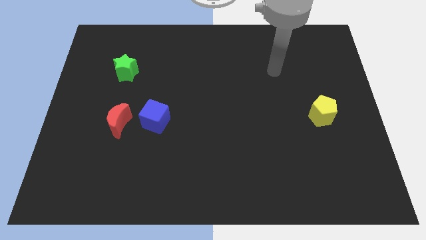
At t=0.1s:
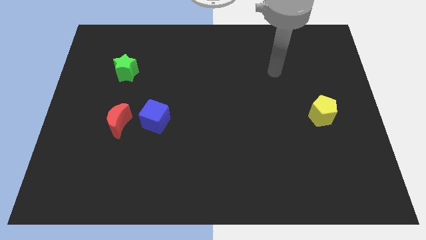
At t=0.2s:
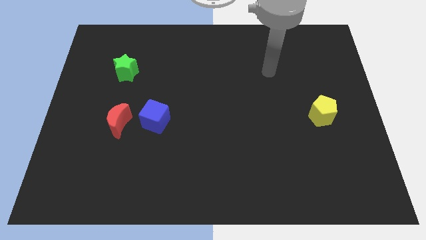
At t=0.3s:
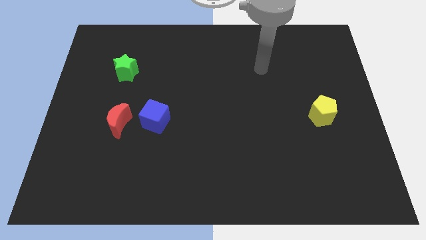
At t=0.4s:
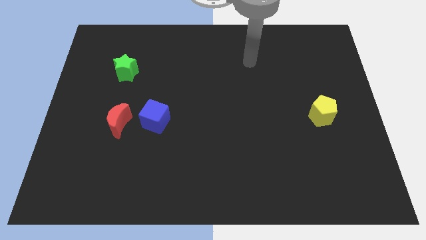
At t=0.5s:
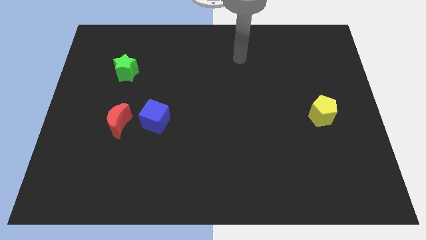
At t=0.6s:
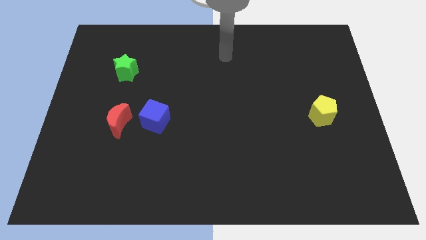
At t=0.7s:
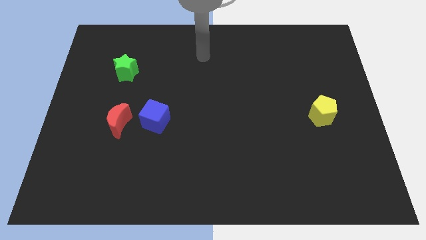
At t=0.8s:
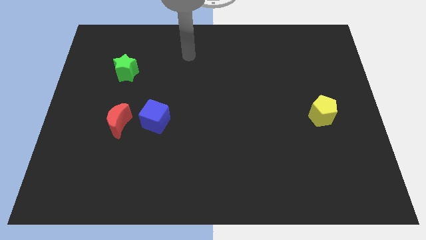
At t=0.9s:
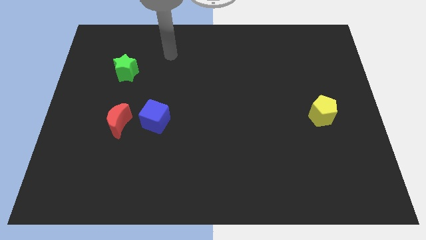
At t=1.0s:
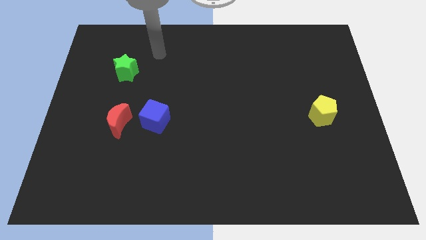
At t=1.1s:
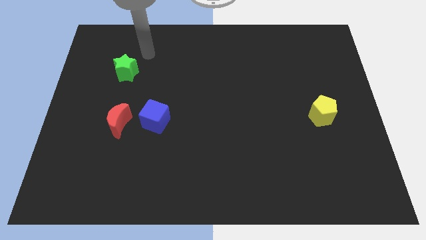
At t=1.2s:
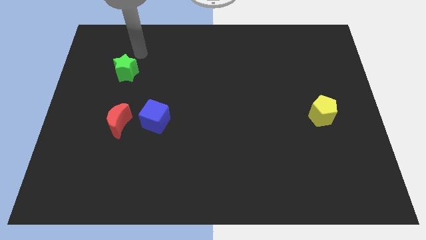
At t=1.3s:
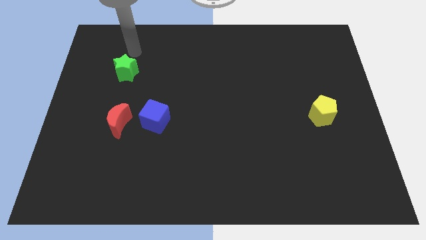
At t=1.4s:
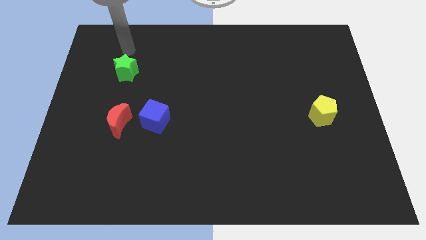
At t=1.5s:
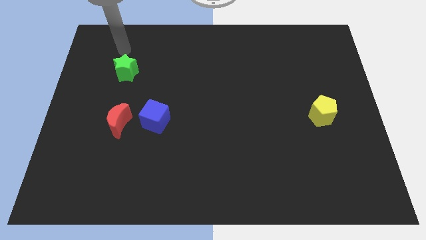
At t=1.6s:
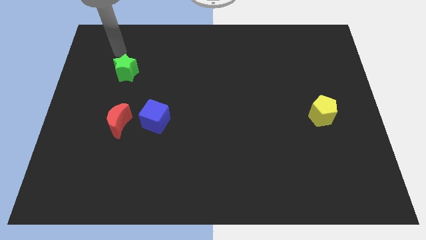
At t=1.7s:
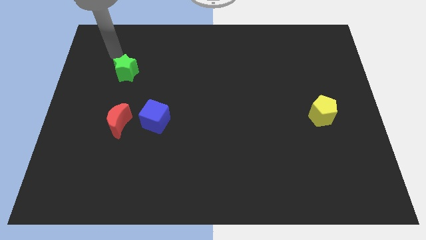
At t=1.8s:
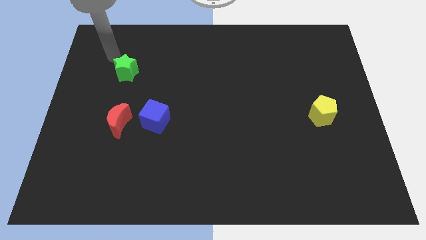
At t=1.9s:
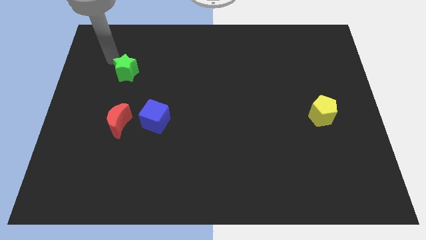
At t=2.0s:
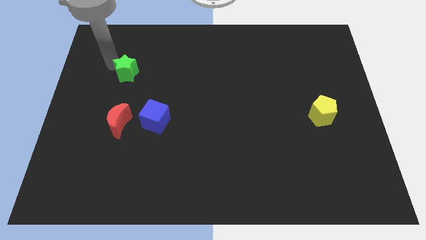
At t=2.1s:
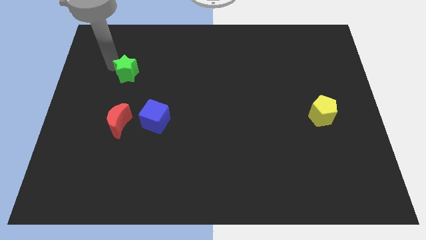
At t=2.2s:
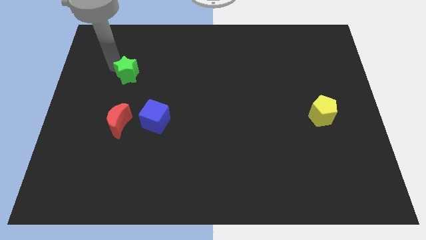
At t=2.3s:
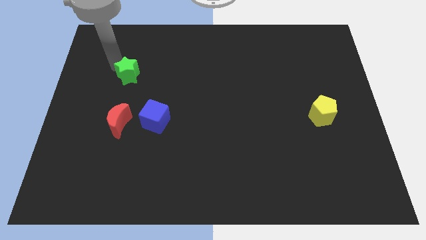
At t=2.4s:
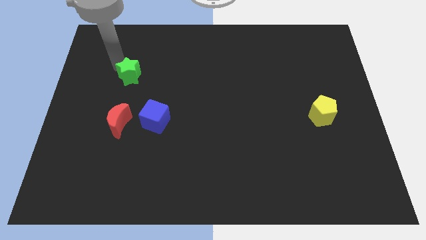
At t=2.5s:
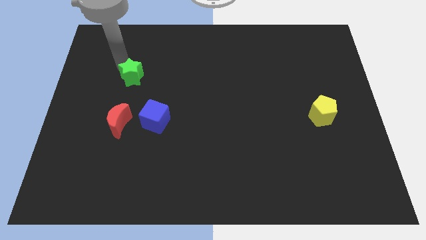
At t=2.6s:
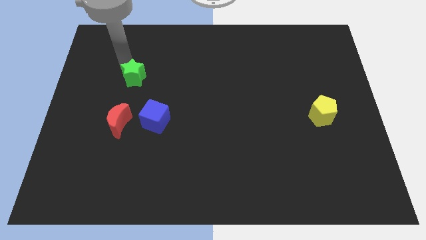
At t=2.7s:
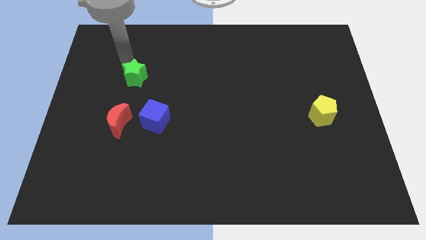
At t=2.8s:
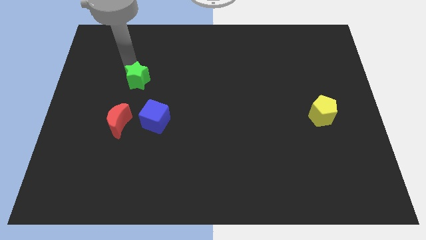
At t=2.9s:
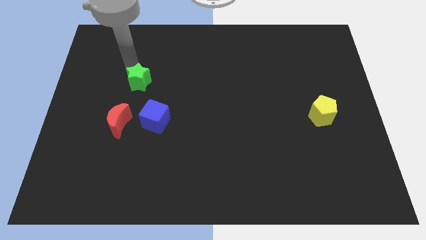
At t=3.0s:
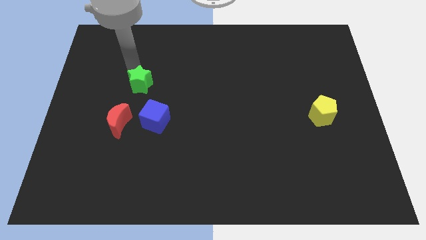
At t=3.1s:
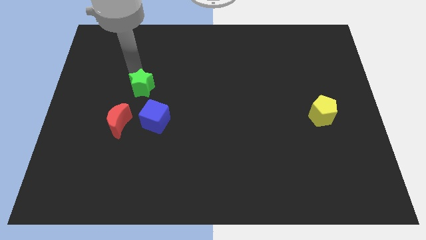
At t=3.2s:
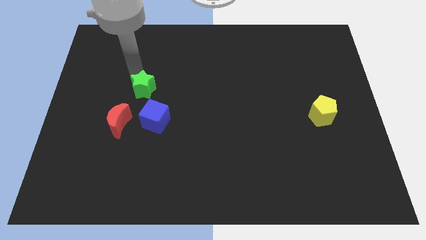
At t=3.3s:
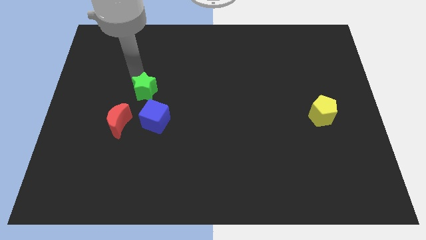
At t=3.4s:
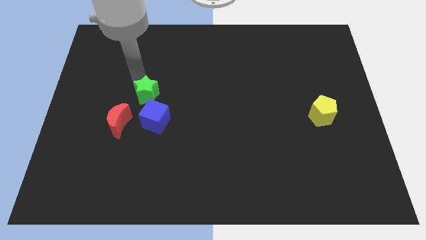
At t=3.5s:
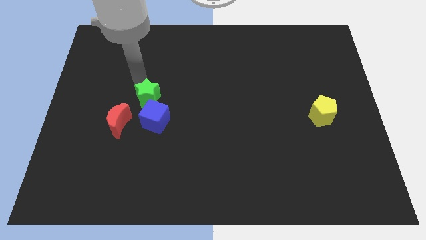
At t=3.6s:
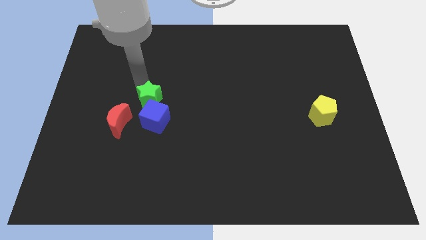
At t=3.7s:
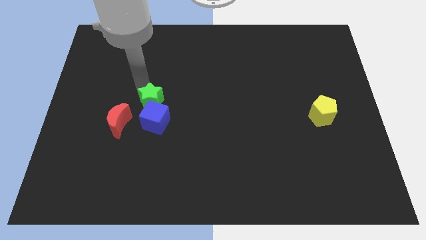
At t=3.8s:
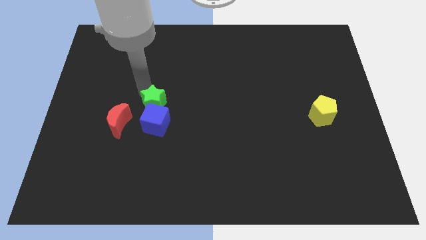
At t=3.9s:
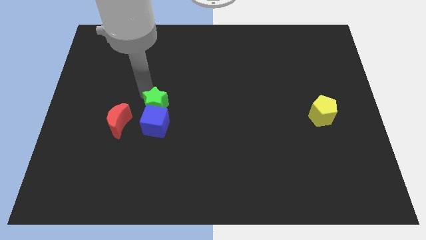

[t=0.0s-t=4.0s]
move the green star next to the cube

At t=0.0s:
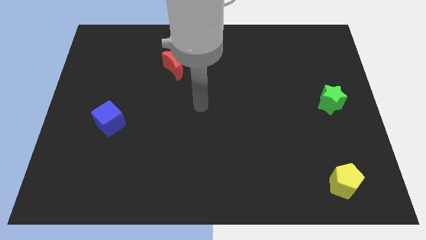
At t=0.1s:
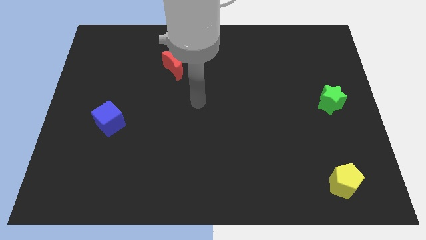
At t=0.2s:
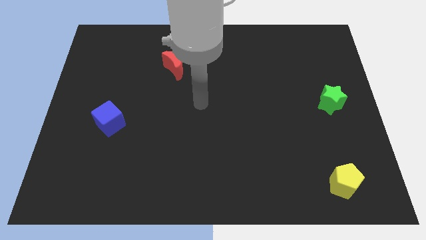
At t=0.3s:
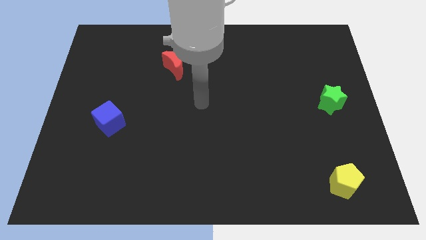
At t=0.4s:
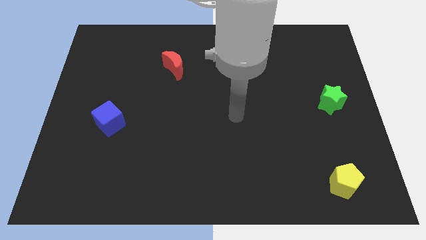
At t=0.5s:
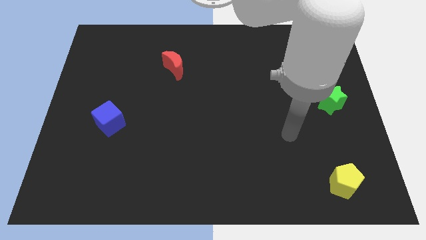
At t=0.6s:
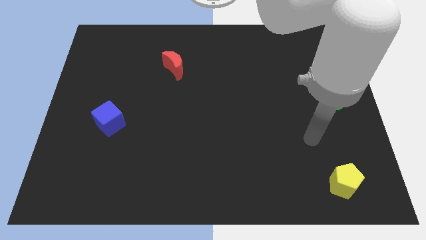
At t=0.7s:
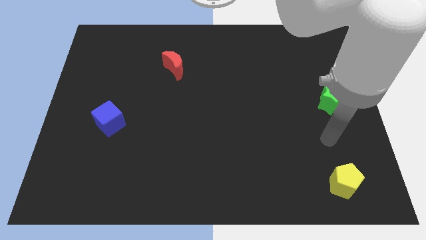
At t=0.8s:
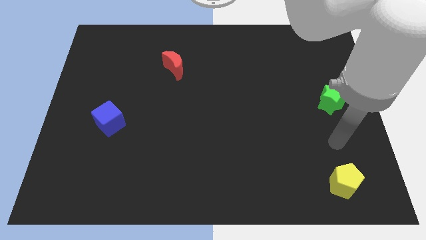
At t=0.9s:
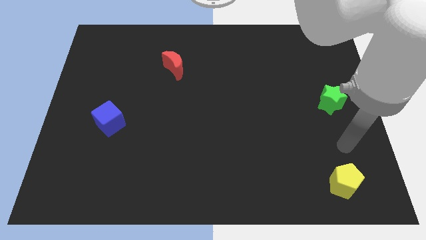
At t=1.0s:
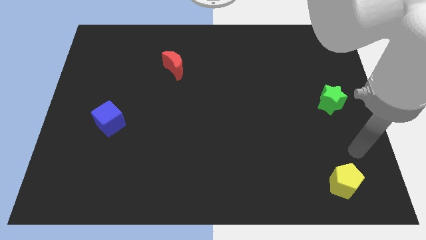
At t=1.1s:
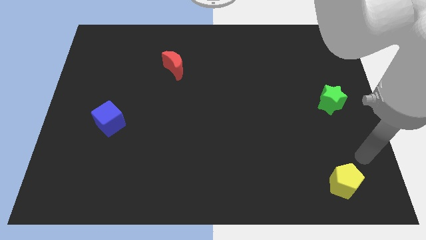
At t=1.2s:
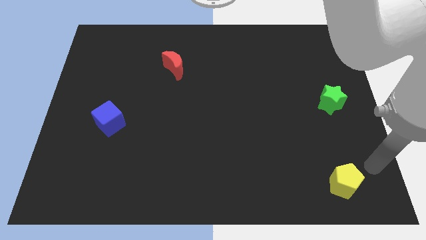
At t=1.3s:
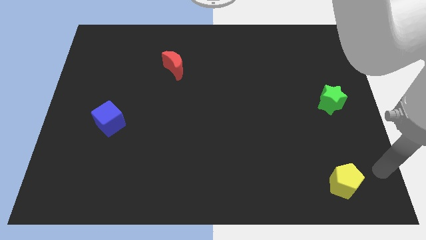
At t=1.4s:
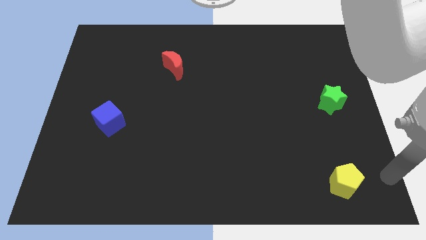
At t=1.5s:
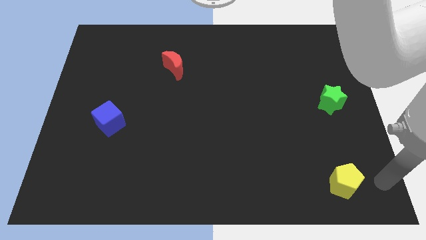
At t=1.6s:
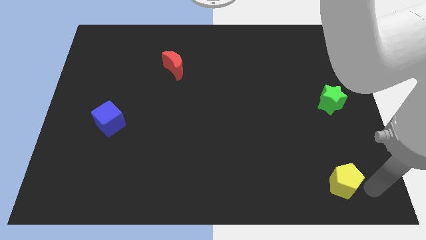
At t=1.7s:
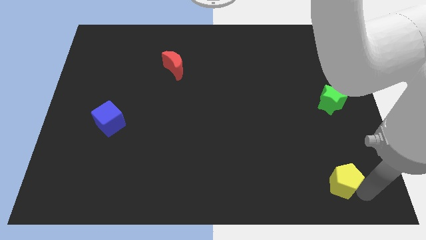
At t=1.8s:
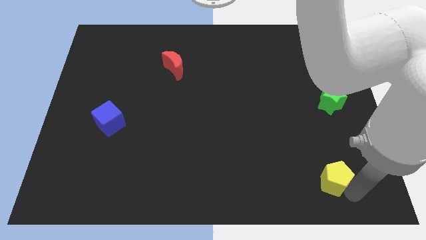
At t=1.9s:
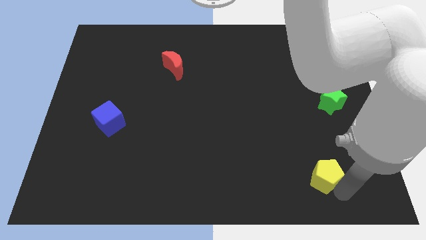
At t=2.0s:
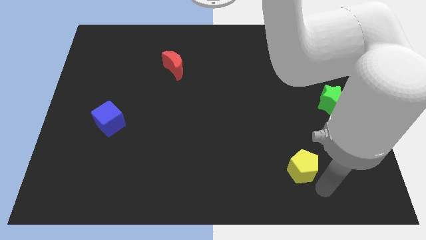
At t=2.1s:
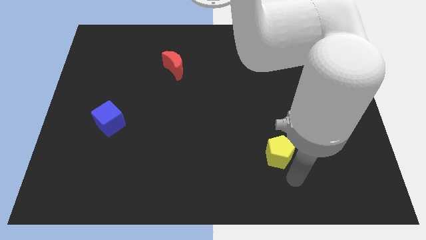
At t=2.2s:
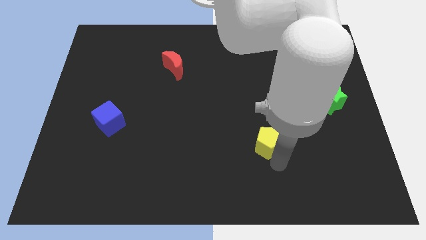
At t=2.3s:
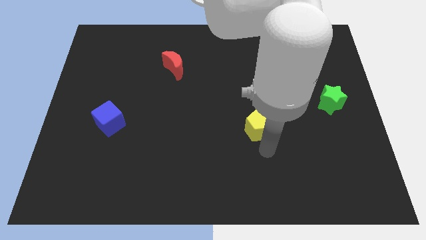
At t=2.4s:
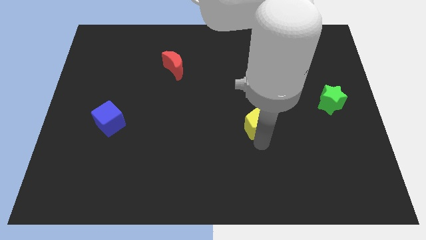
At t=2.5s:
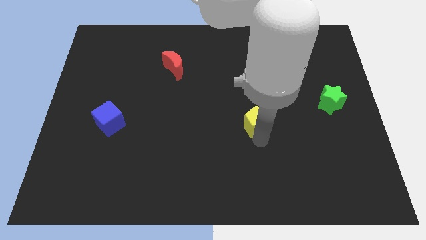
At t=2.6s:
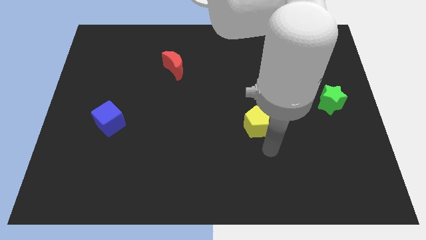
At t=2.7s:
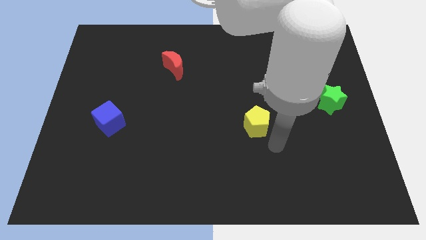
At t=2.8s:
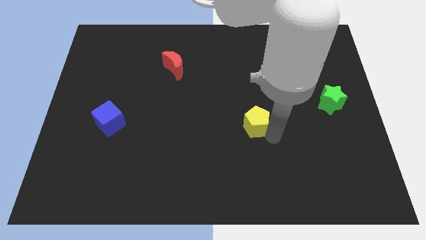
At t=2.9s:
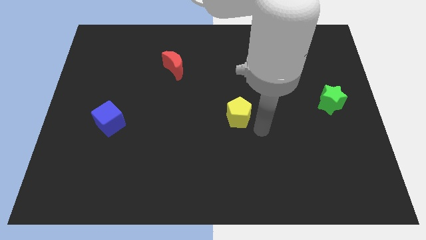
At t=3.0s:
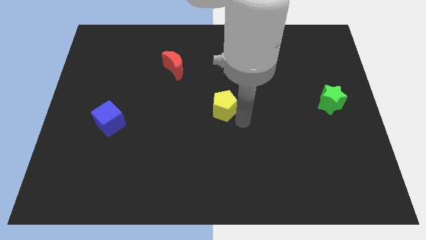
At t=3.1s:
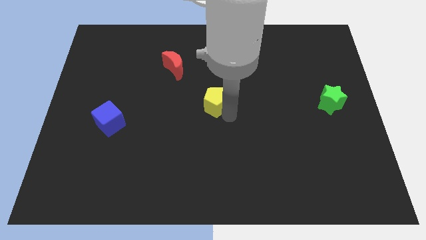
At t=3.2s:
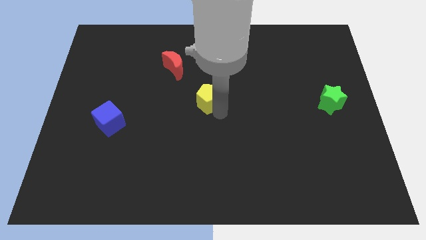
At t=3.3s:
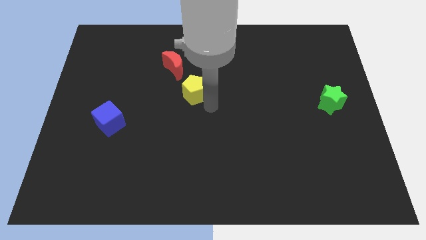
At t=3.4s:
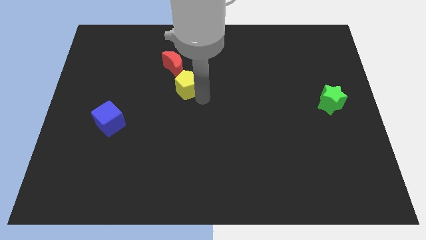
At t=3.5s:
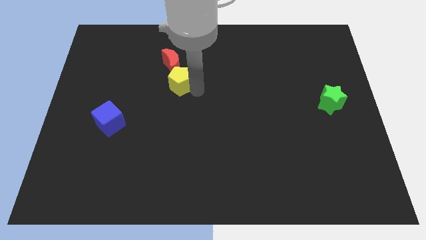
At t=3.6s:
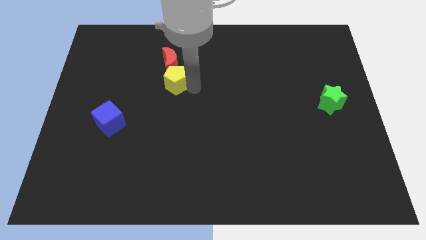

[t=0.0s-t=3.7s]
move the yellow pentagon to the red moon

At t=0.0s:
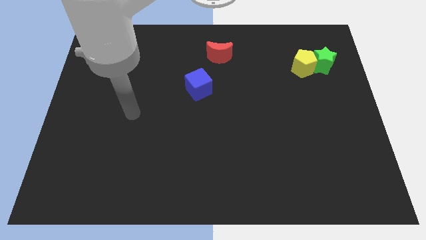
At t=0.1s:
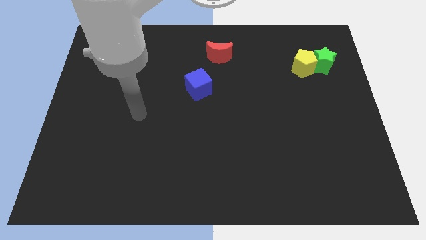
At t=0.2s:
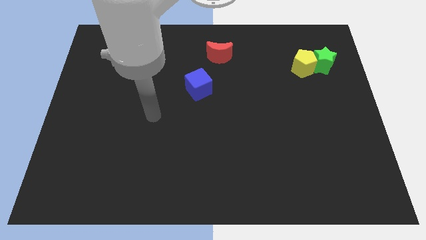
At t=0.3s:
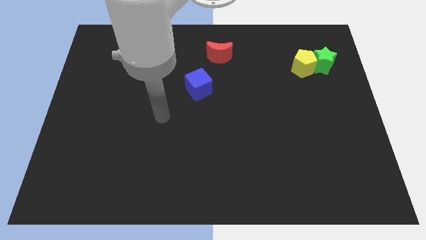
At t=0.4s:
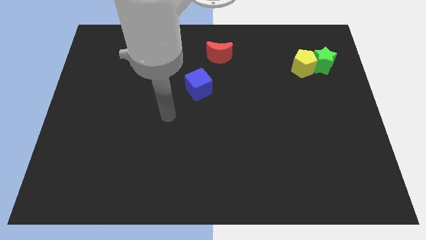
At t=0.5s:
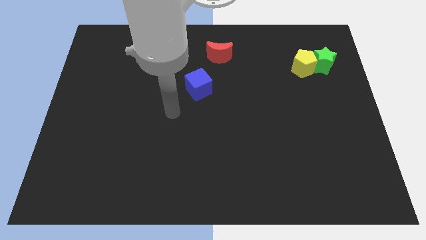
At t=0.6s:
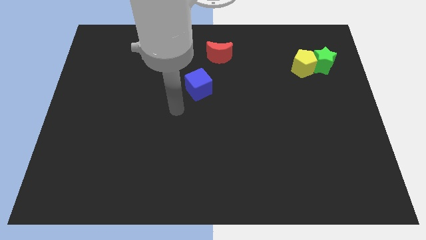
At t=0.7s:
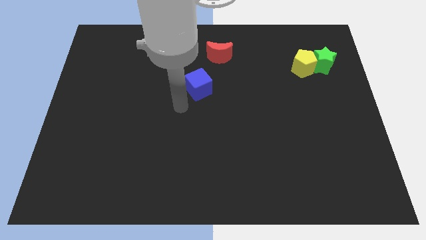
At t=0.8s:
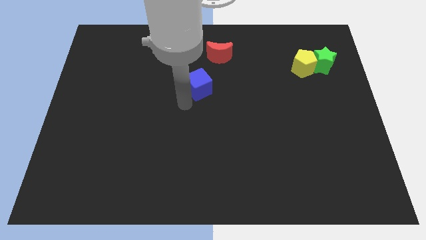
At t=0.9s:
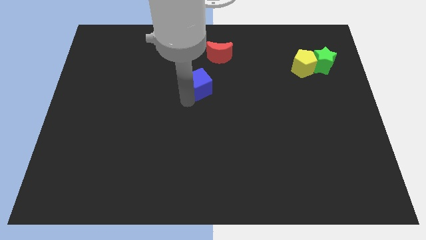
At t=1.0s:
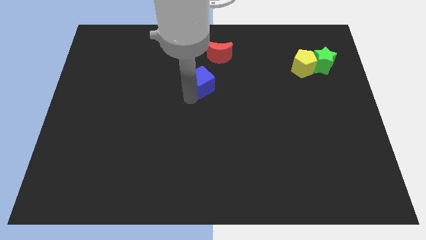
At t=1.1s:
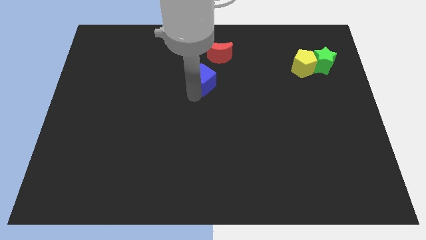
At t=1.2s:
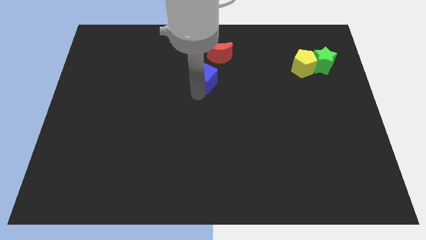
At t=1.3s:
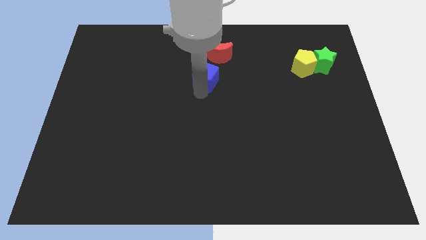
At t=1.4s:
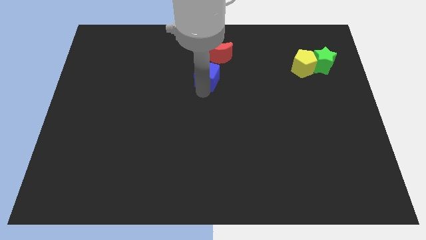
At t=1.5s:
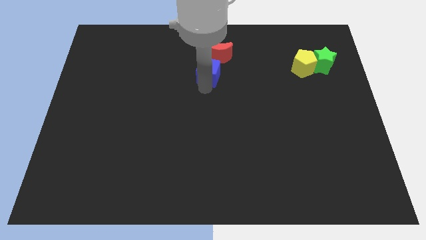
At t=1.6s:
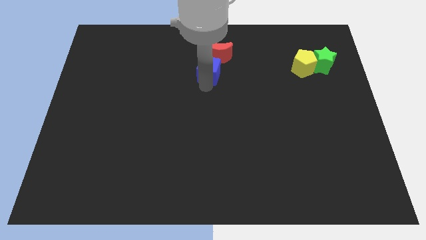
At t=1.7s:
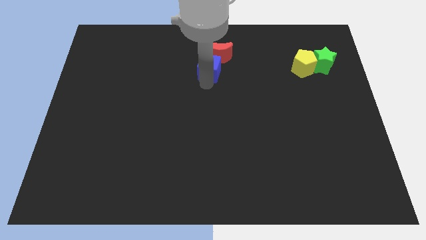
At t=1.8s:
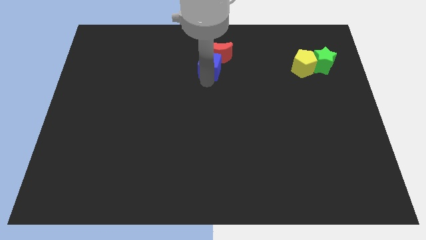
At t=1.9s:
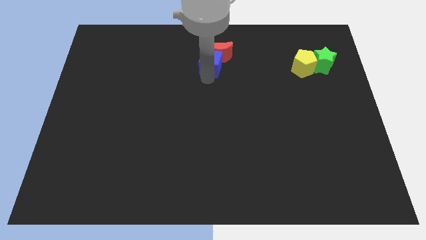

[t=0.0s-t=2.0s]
slide the blue block next to the red moon
